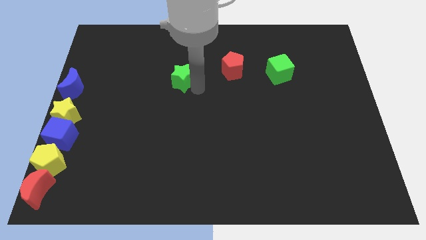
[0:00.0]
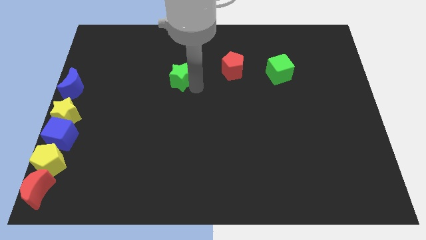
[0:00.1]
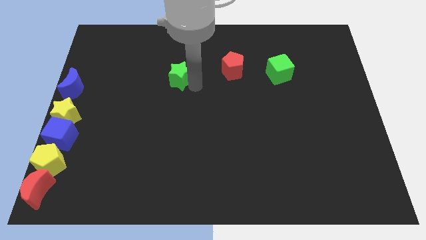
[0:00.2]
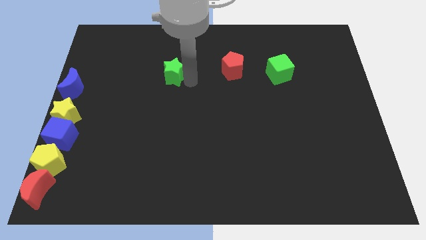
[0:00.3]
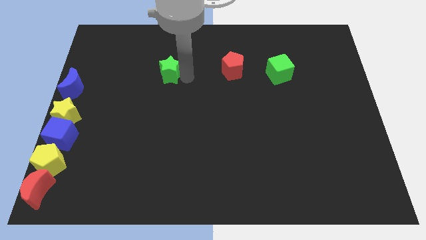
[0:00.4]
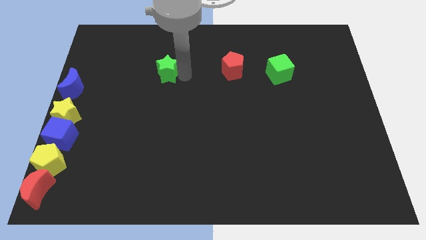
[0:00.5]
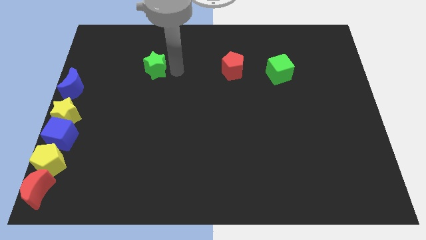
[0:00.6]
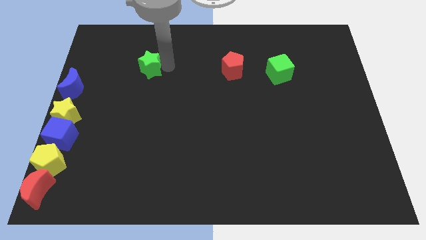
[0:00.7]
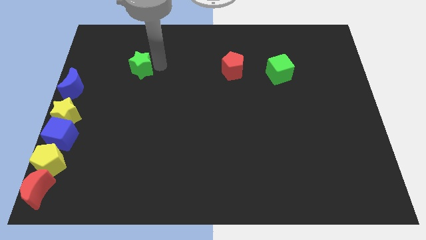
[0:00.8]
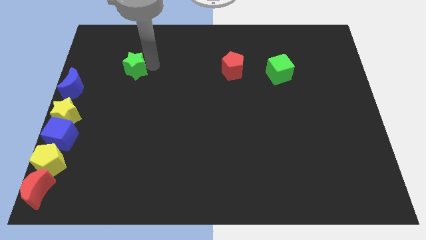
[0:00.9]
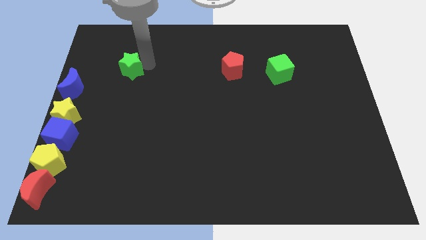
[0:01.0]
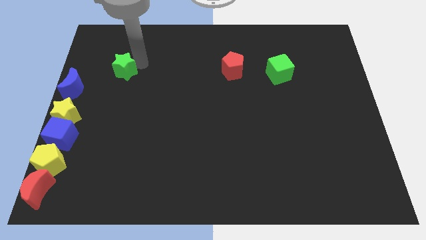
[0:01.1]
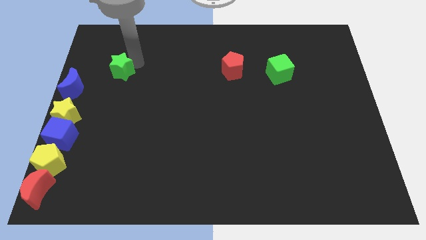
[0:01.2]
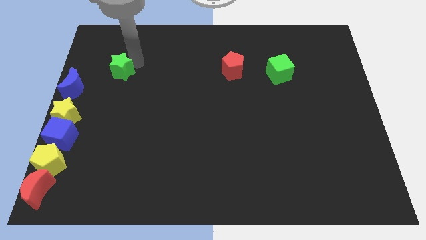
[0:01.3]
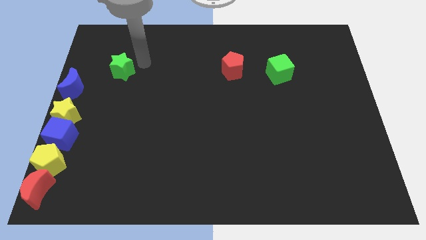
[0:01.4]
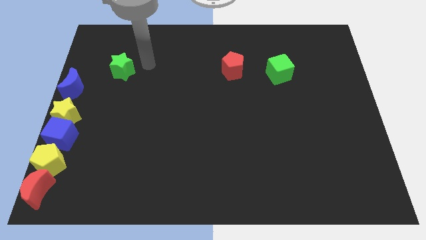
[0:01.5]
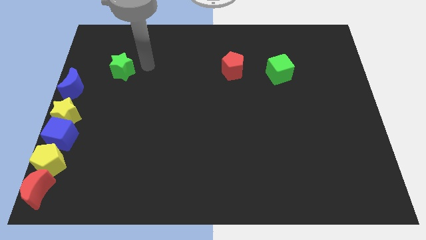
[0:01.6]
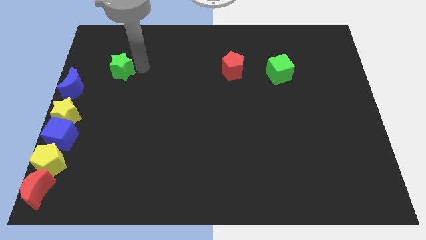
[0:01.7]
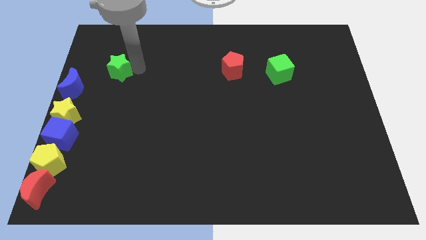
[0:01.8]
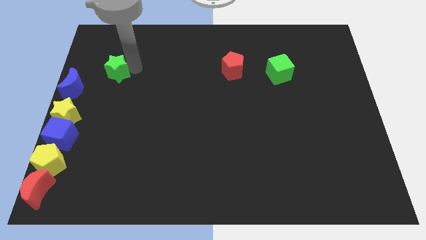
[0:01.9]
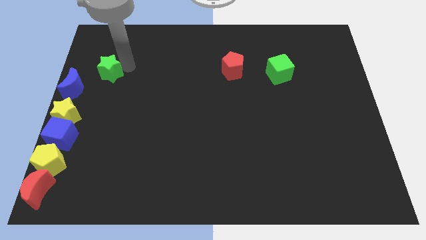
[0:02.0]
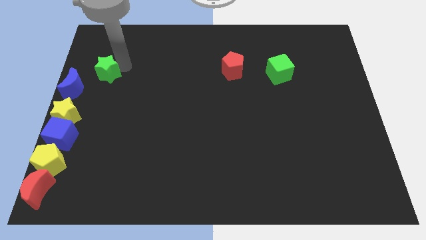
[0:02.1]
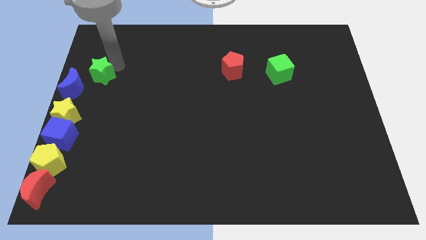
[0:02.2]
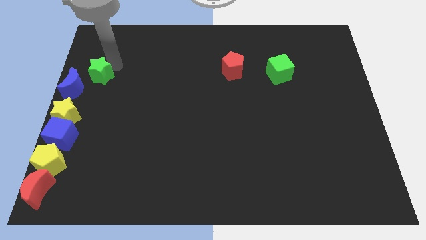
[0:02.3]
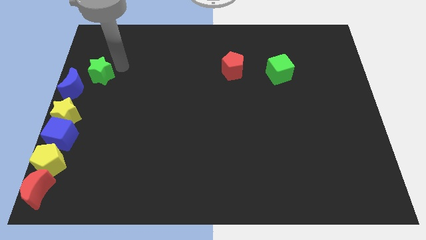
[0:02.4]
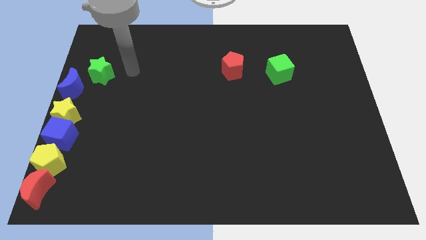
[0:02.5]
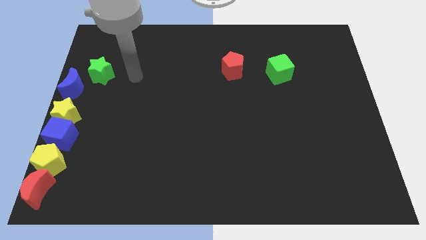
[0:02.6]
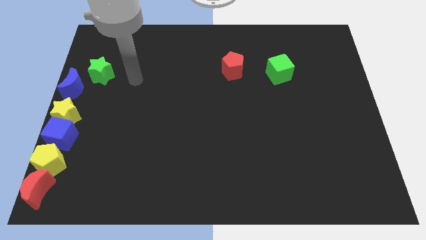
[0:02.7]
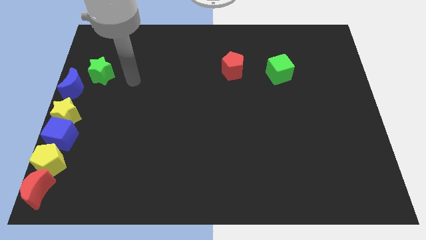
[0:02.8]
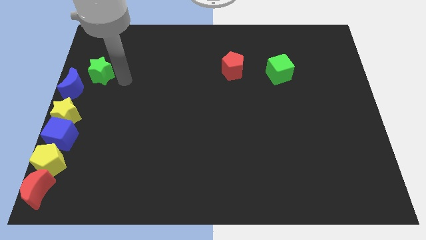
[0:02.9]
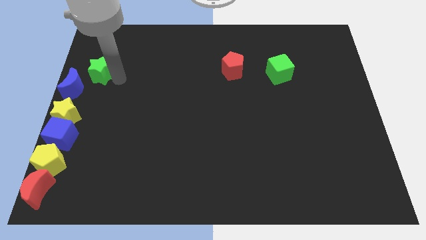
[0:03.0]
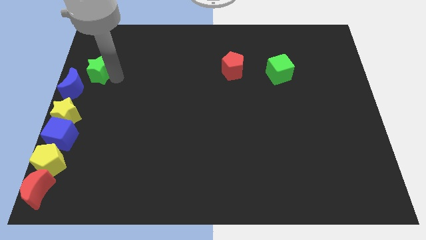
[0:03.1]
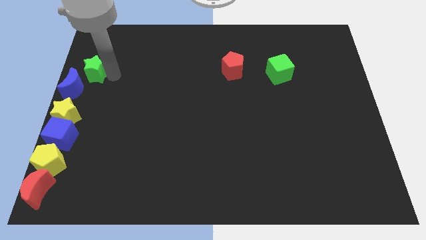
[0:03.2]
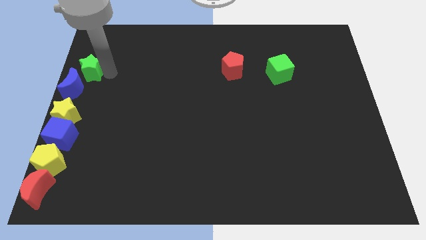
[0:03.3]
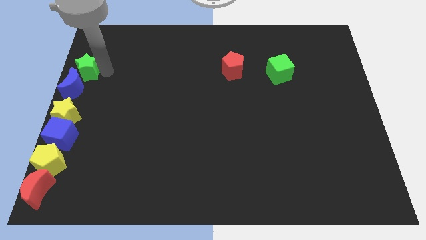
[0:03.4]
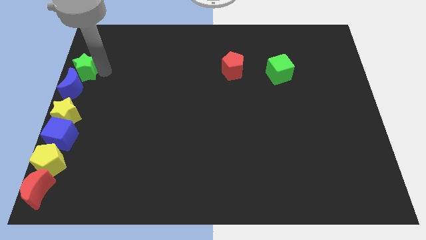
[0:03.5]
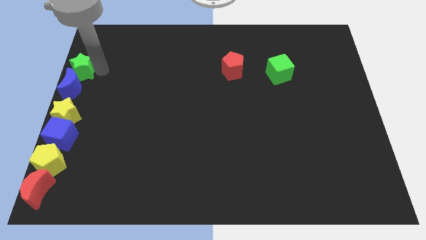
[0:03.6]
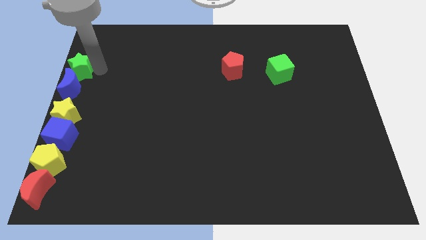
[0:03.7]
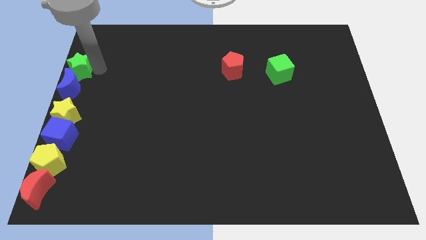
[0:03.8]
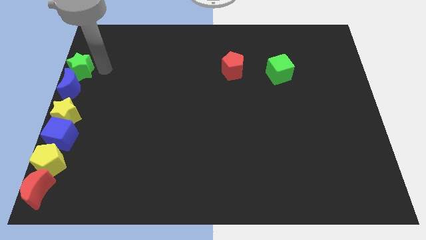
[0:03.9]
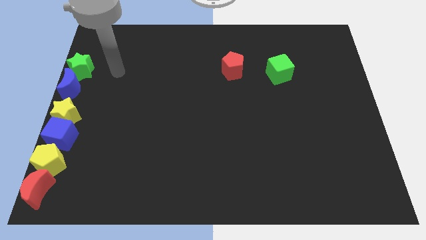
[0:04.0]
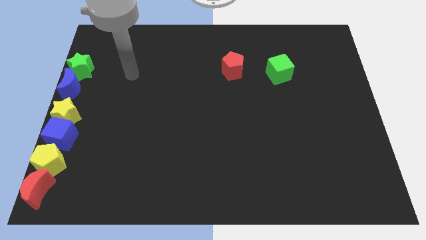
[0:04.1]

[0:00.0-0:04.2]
move the green star above to the blue moon

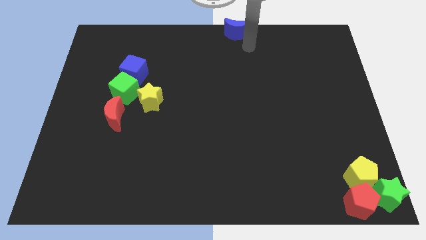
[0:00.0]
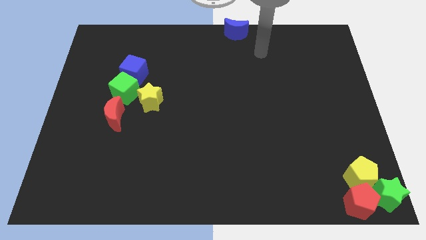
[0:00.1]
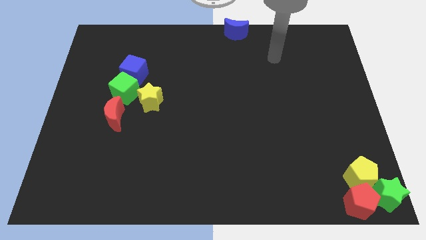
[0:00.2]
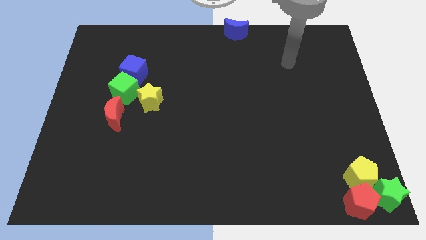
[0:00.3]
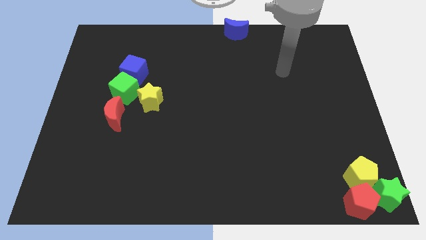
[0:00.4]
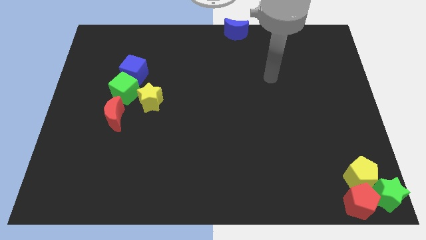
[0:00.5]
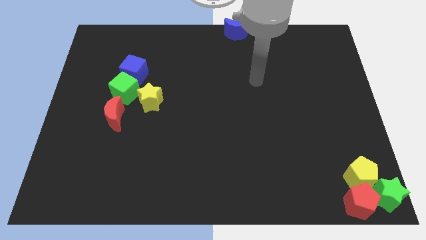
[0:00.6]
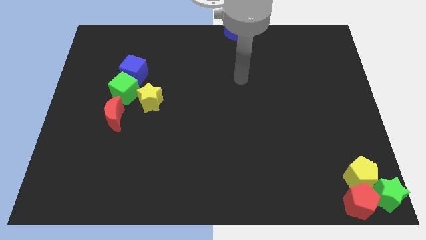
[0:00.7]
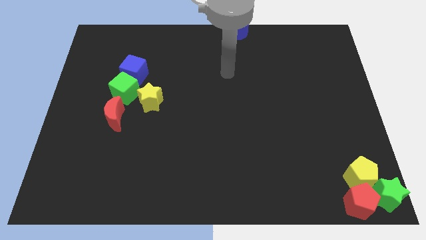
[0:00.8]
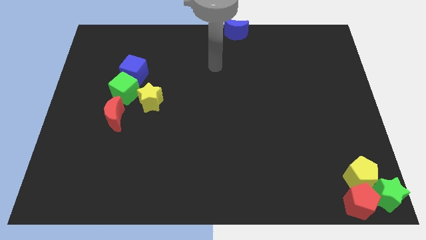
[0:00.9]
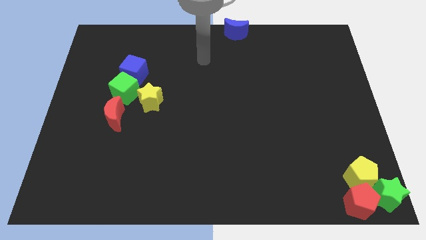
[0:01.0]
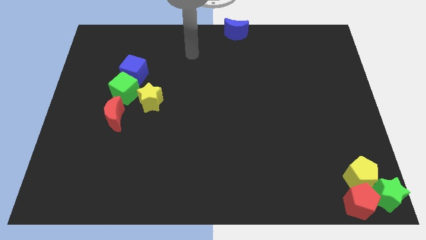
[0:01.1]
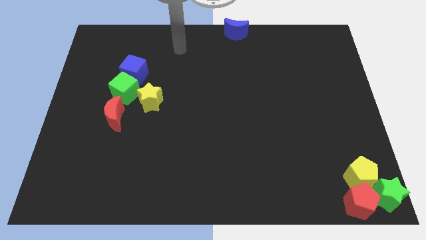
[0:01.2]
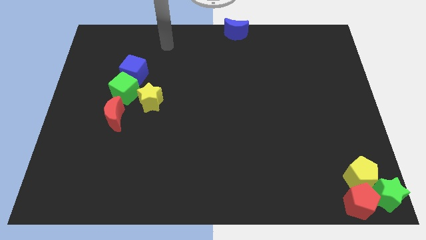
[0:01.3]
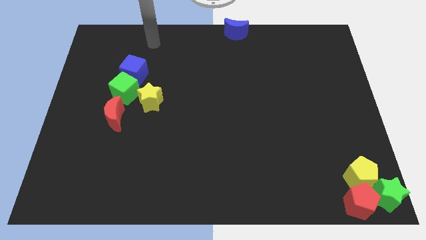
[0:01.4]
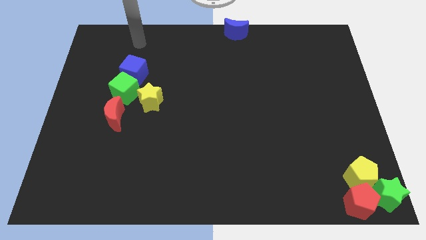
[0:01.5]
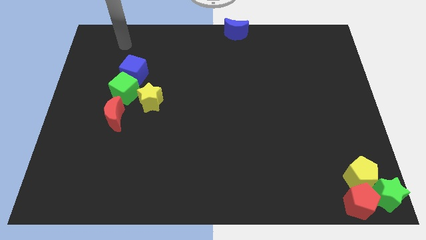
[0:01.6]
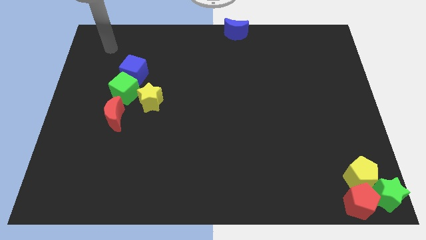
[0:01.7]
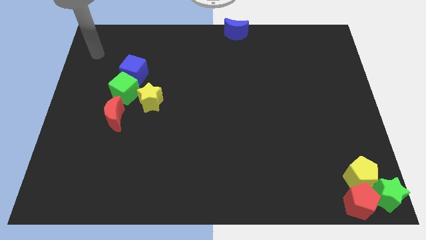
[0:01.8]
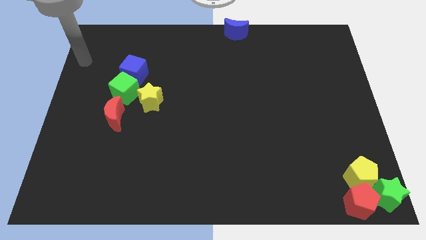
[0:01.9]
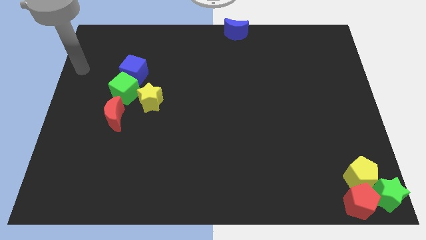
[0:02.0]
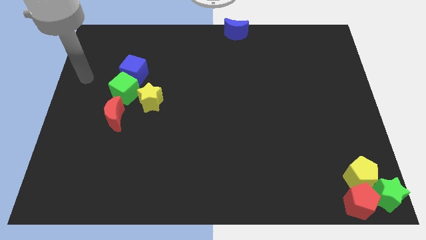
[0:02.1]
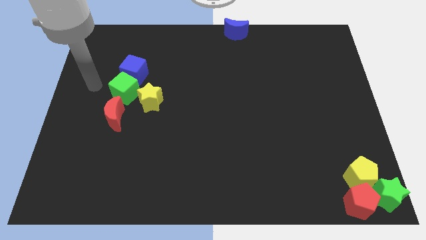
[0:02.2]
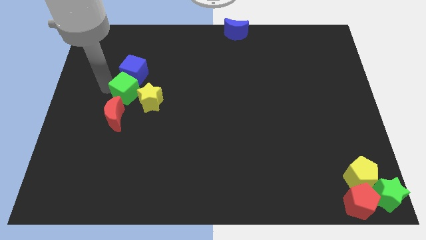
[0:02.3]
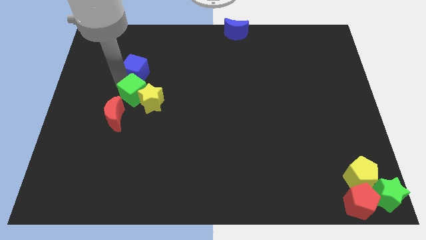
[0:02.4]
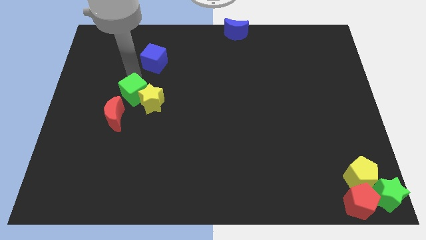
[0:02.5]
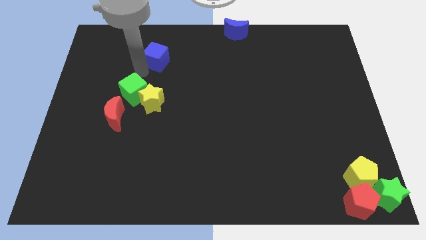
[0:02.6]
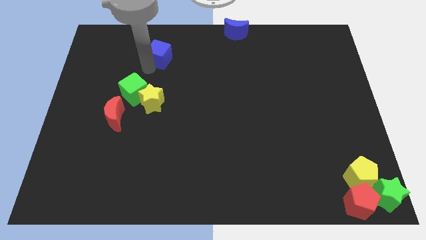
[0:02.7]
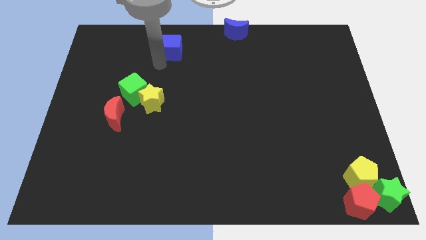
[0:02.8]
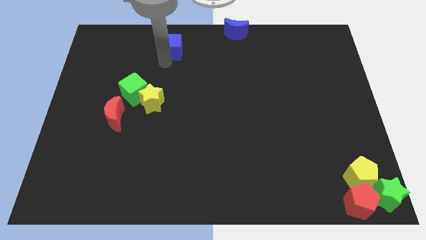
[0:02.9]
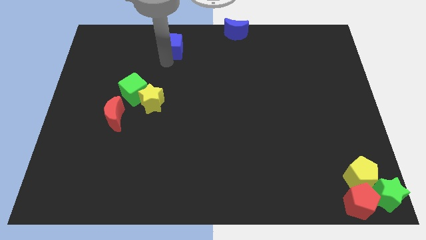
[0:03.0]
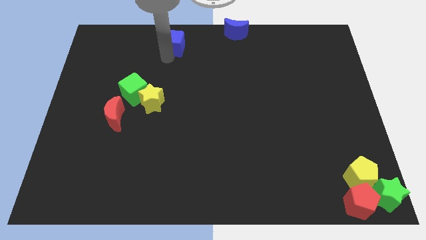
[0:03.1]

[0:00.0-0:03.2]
separate the blue cube from green cube

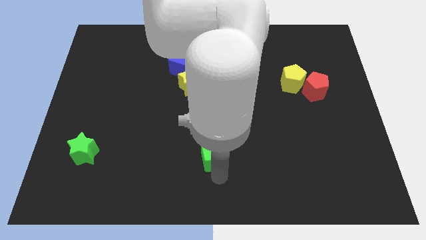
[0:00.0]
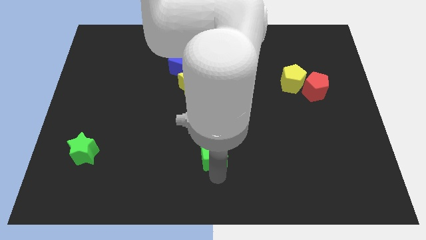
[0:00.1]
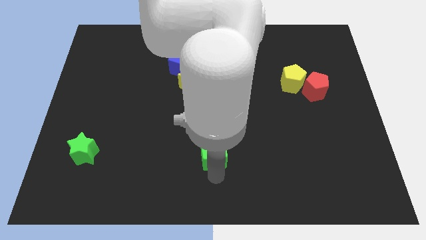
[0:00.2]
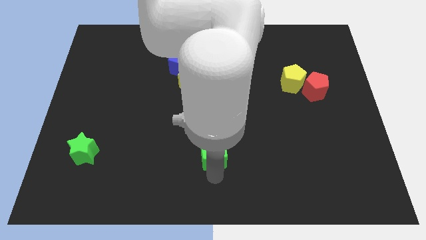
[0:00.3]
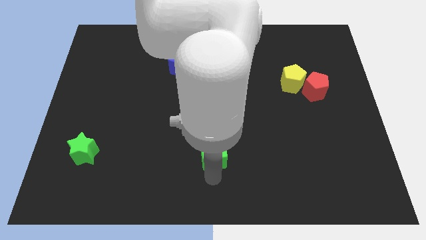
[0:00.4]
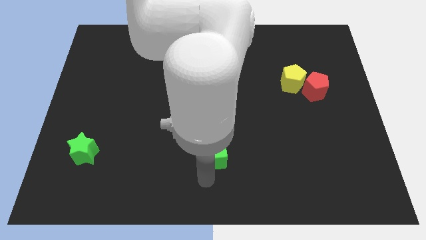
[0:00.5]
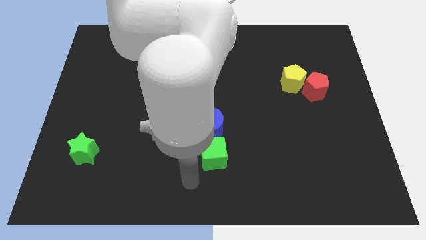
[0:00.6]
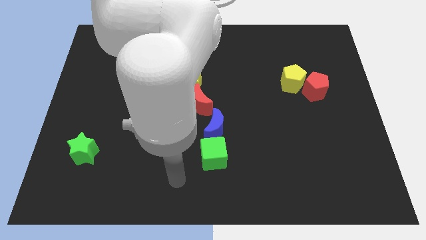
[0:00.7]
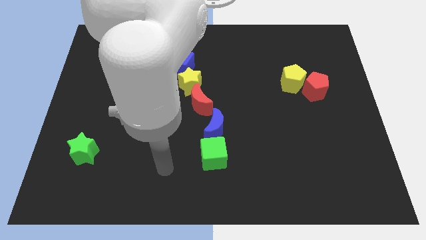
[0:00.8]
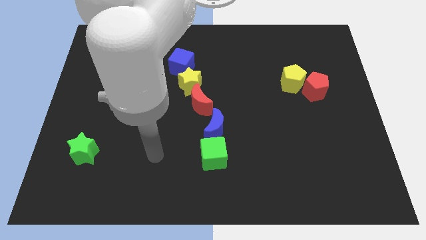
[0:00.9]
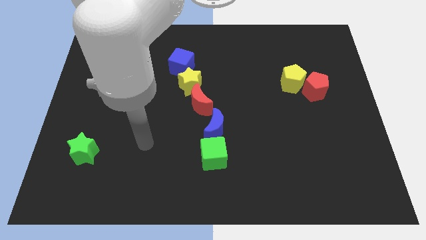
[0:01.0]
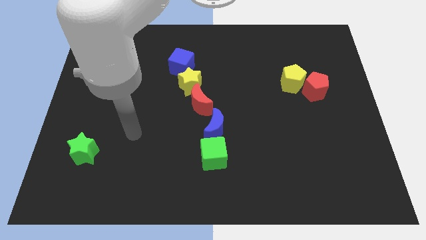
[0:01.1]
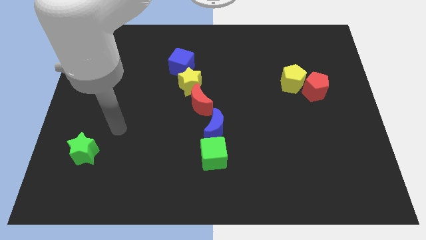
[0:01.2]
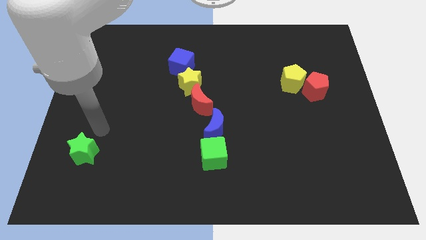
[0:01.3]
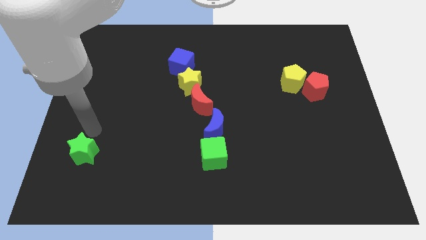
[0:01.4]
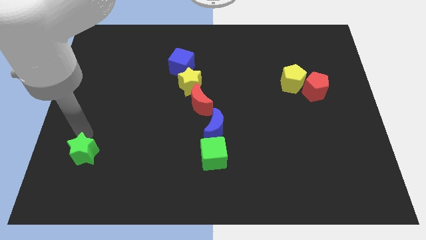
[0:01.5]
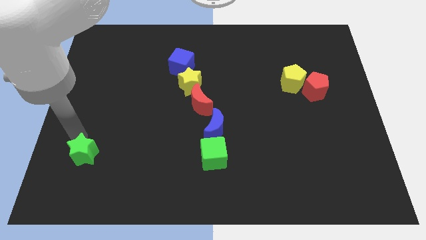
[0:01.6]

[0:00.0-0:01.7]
place the arm on the top of the green star
